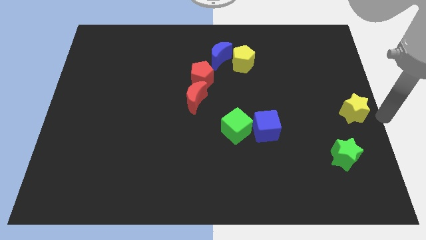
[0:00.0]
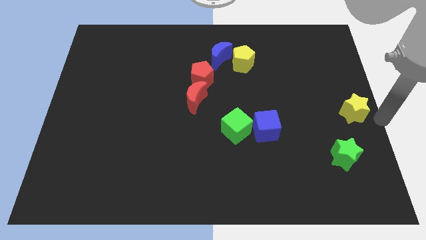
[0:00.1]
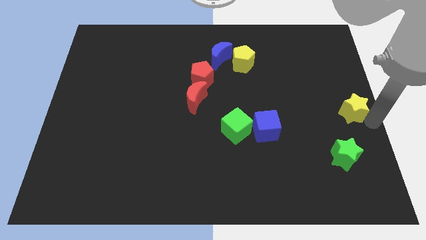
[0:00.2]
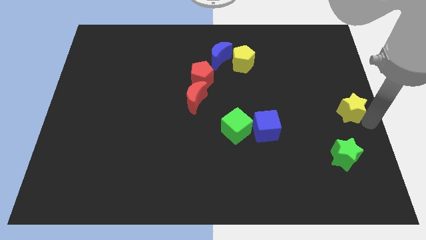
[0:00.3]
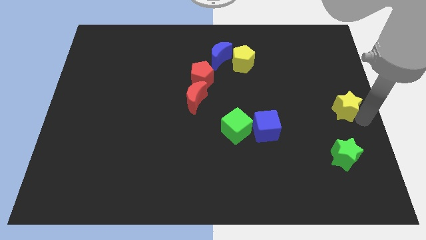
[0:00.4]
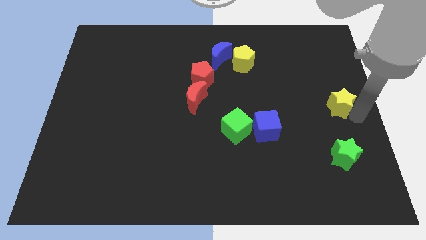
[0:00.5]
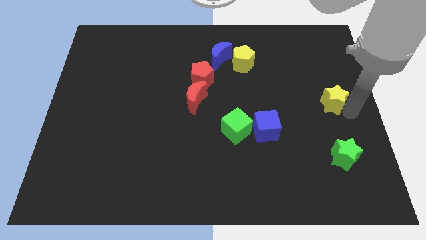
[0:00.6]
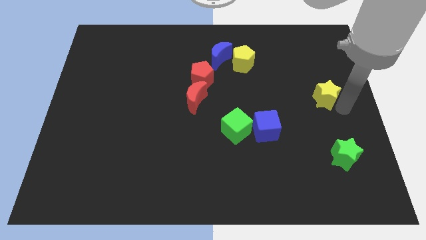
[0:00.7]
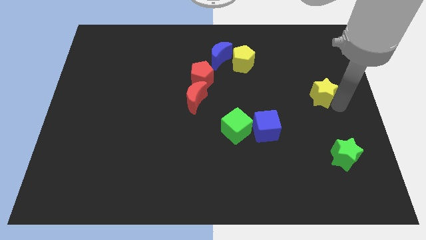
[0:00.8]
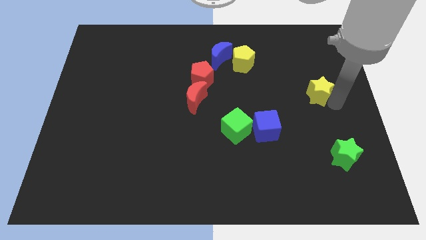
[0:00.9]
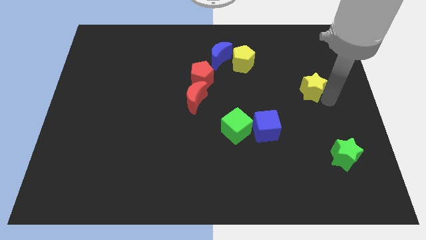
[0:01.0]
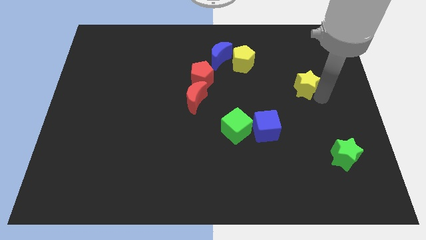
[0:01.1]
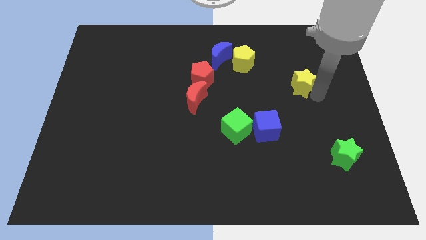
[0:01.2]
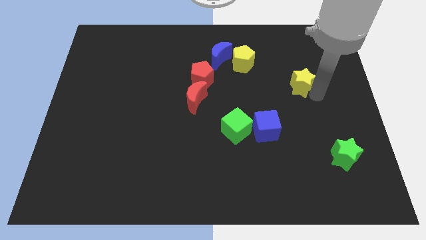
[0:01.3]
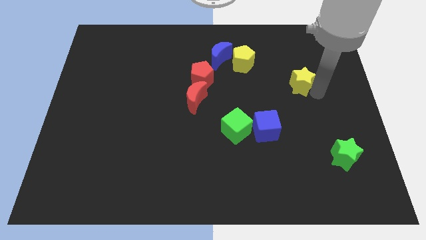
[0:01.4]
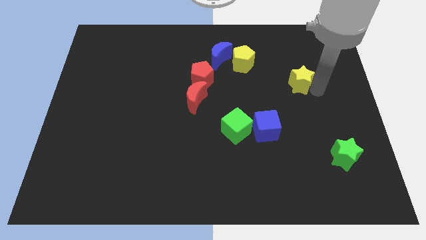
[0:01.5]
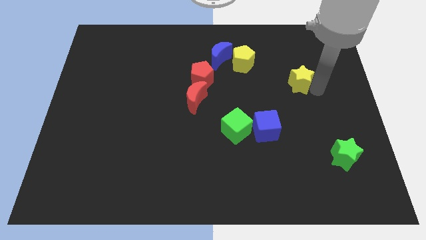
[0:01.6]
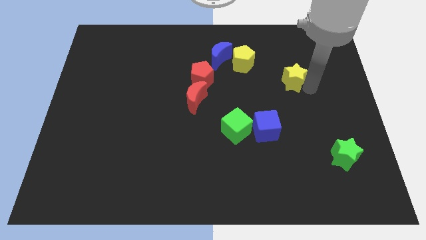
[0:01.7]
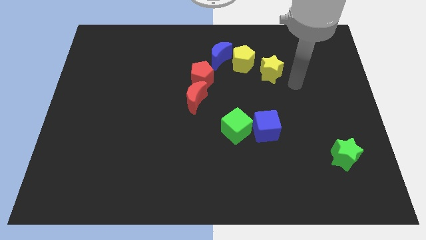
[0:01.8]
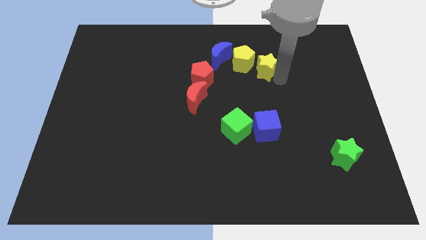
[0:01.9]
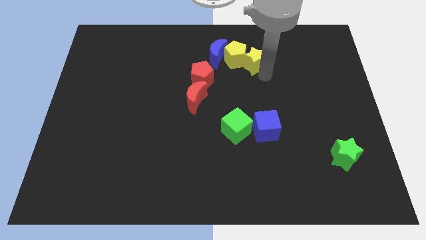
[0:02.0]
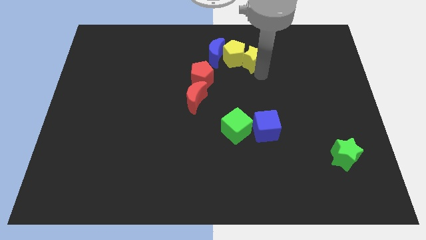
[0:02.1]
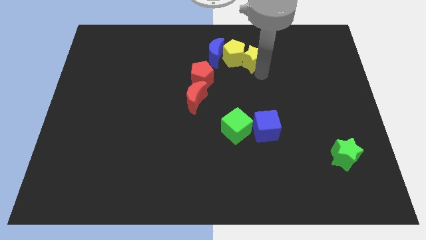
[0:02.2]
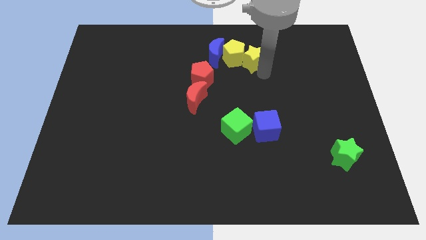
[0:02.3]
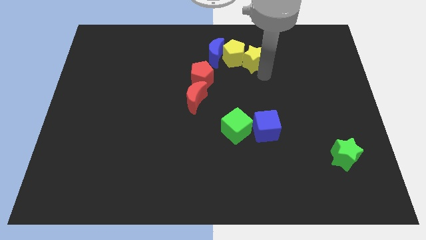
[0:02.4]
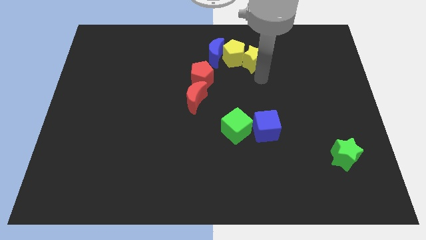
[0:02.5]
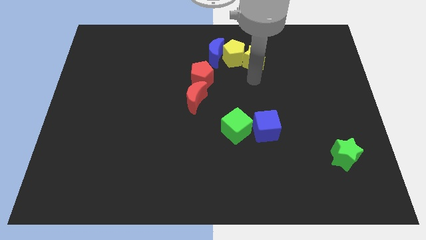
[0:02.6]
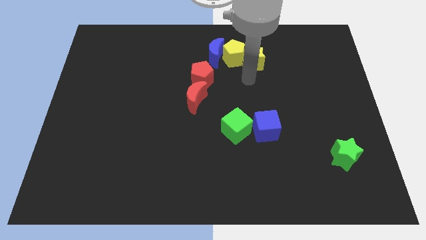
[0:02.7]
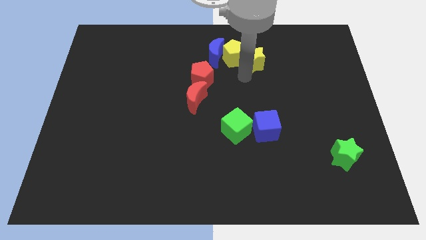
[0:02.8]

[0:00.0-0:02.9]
place the yellow star right to the yellow pentagon

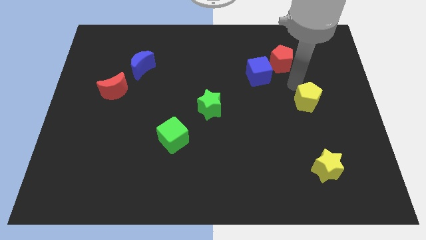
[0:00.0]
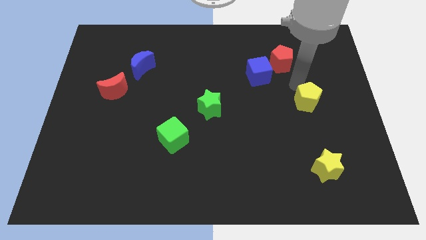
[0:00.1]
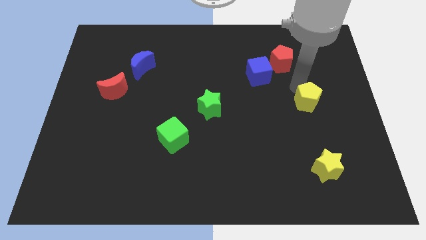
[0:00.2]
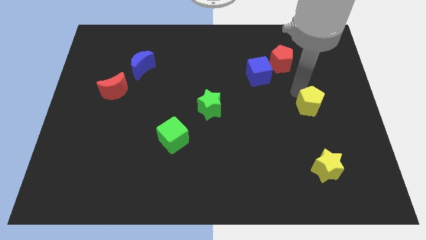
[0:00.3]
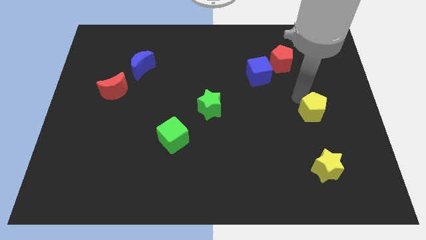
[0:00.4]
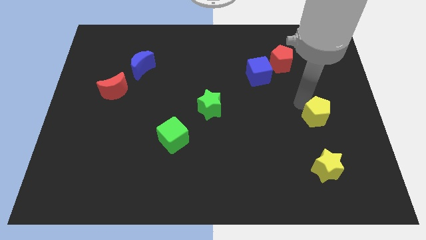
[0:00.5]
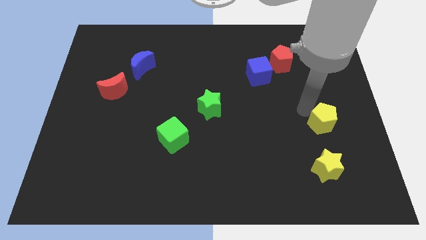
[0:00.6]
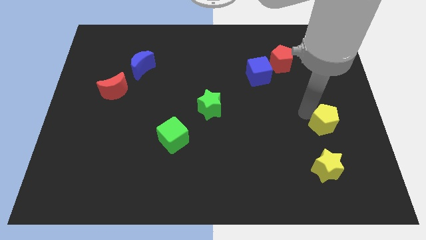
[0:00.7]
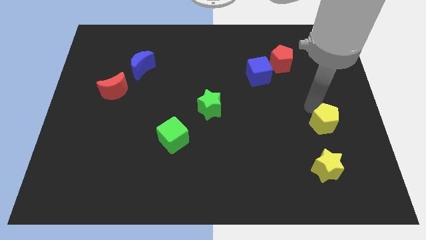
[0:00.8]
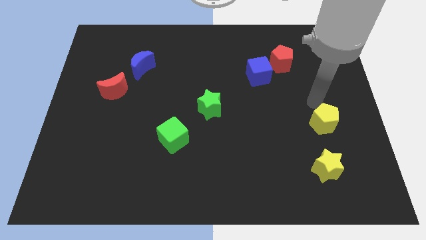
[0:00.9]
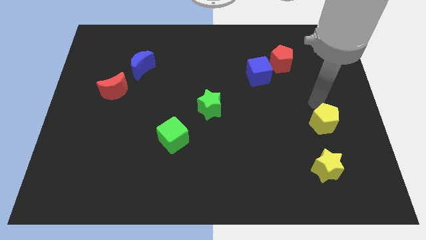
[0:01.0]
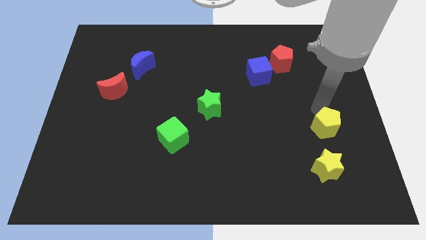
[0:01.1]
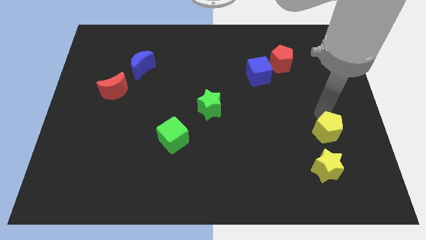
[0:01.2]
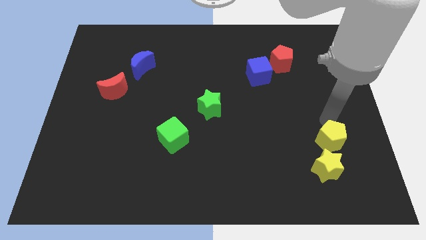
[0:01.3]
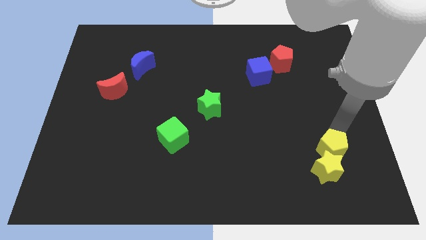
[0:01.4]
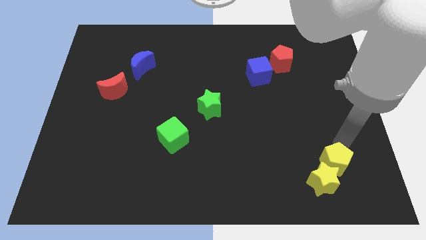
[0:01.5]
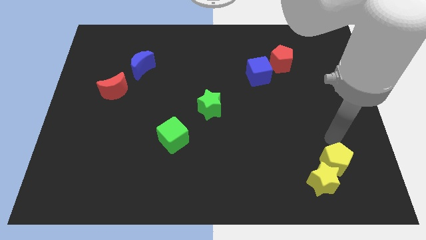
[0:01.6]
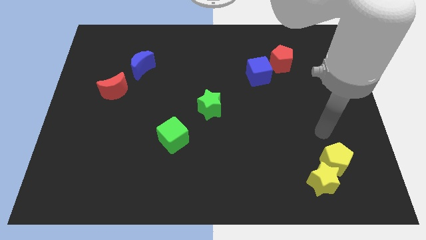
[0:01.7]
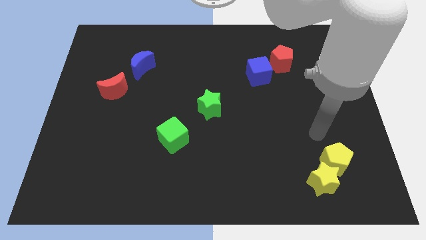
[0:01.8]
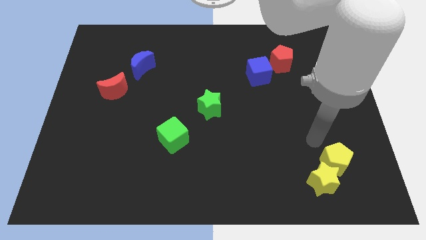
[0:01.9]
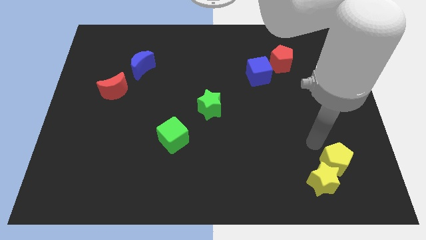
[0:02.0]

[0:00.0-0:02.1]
push the yellow pentagon into the yellow star

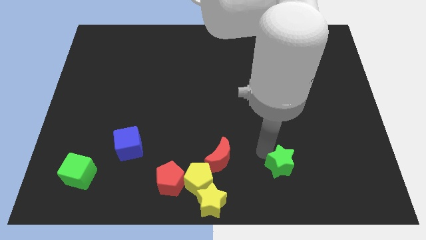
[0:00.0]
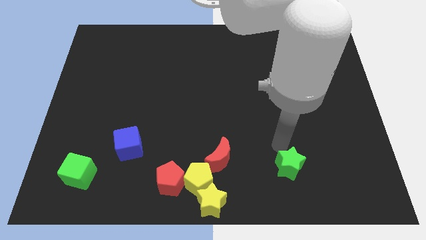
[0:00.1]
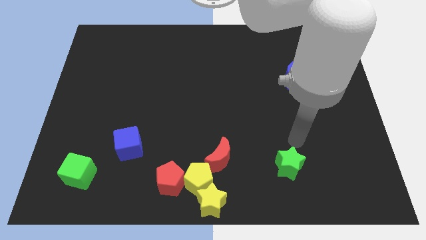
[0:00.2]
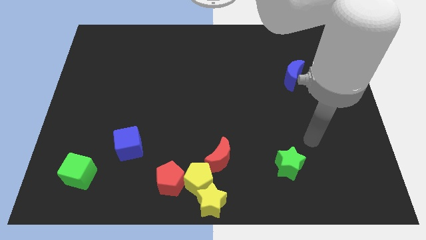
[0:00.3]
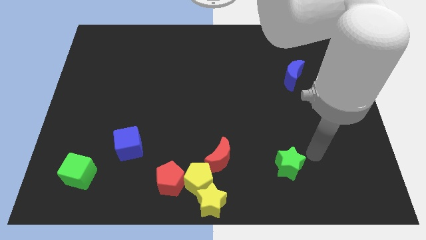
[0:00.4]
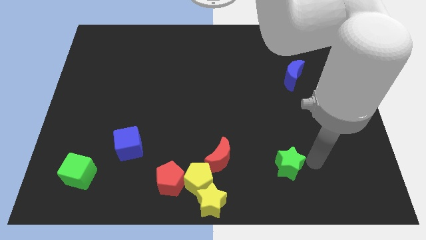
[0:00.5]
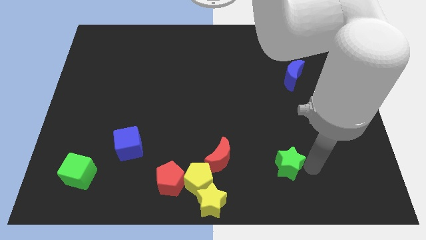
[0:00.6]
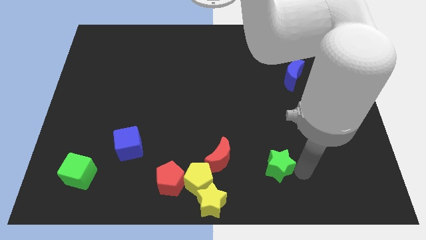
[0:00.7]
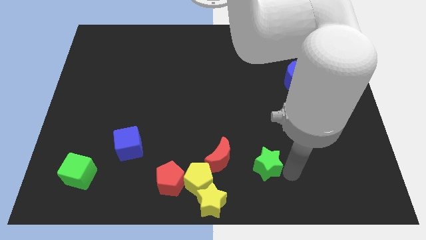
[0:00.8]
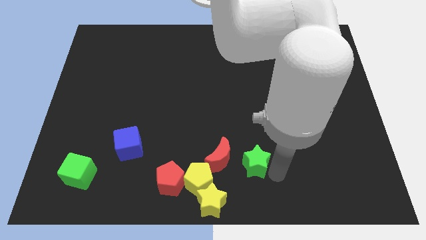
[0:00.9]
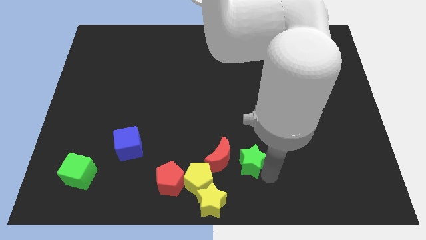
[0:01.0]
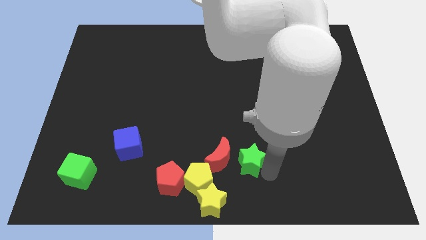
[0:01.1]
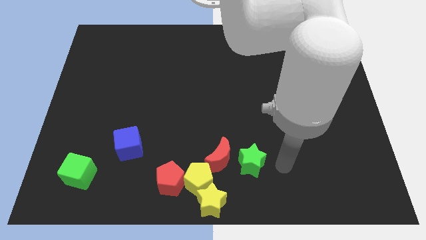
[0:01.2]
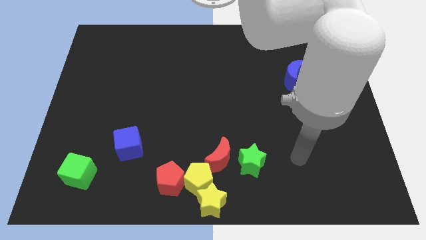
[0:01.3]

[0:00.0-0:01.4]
move the green star towards the left

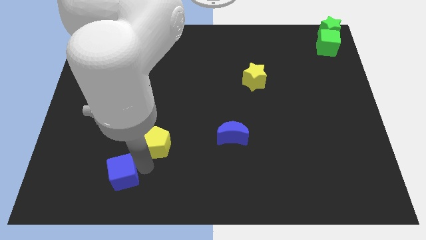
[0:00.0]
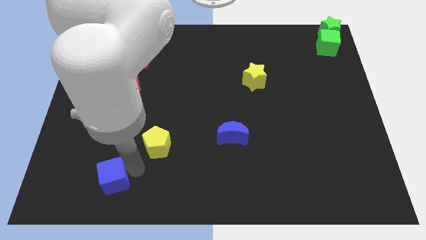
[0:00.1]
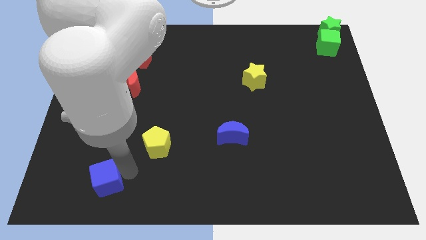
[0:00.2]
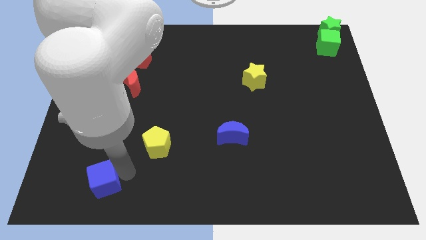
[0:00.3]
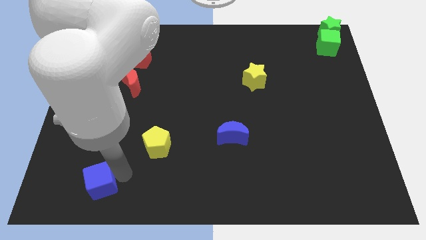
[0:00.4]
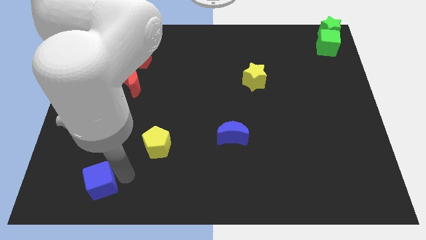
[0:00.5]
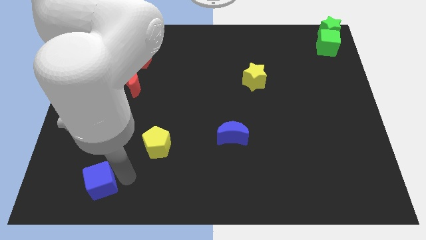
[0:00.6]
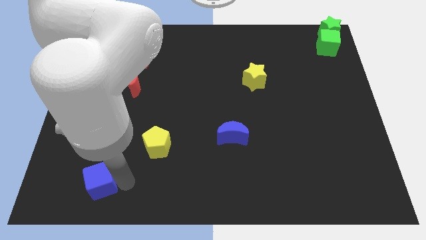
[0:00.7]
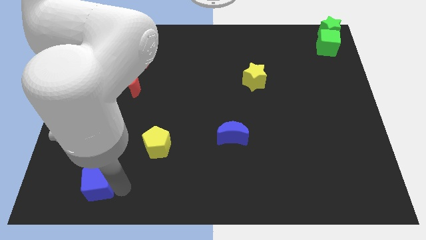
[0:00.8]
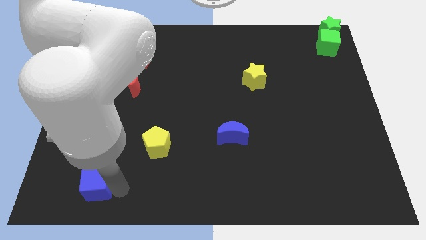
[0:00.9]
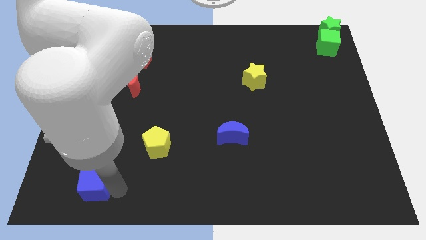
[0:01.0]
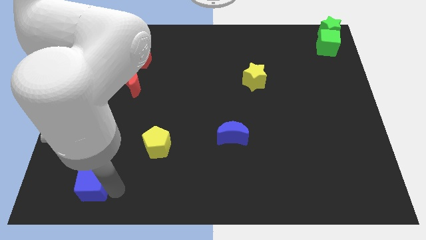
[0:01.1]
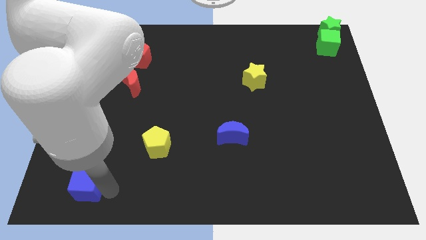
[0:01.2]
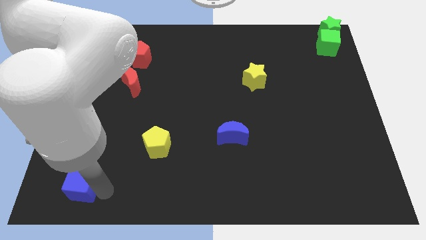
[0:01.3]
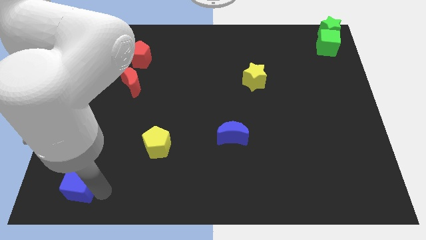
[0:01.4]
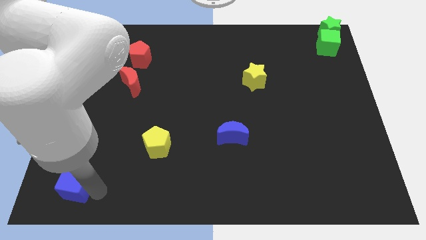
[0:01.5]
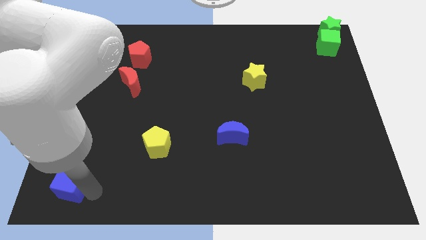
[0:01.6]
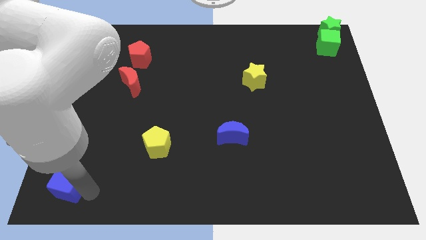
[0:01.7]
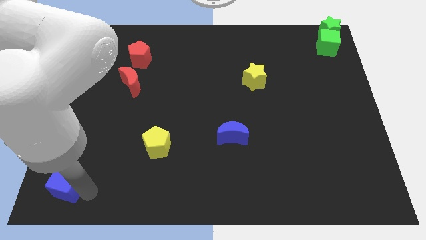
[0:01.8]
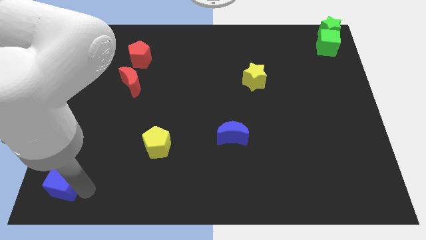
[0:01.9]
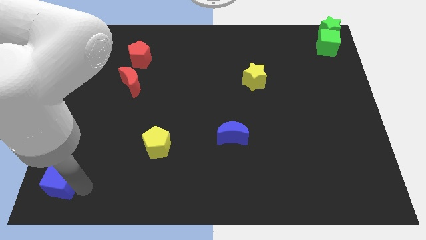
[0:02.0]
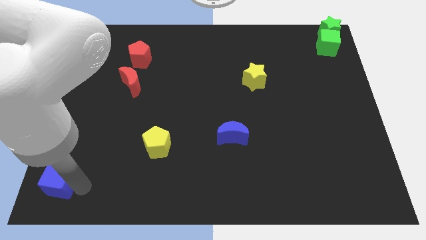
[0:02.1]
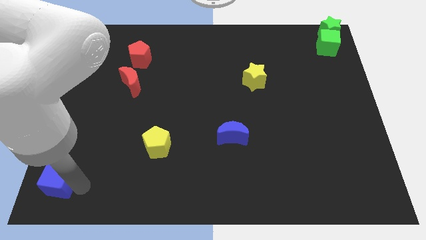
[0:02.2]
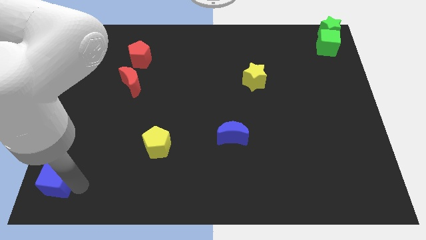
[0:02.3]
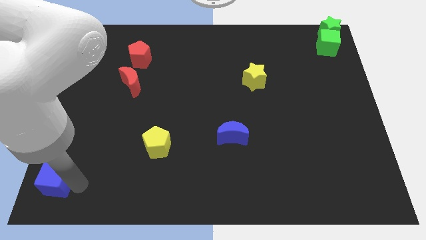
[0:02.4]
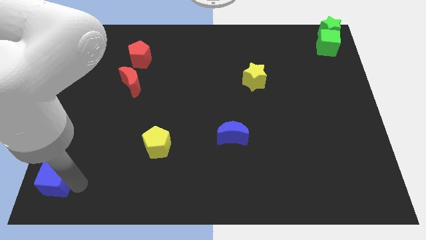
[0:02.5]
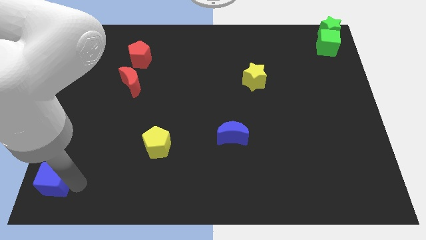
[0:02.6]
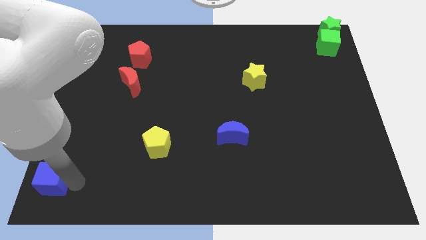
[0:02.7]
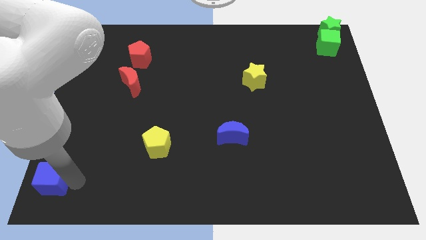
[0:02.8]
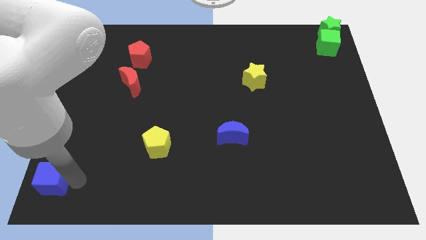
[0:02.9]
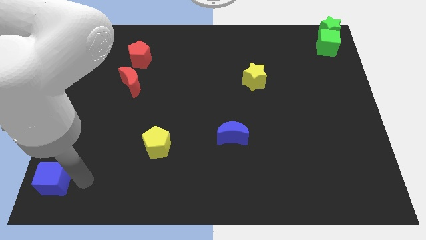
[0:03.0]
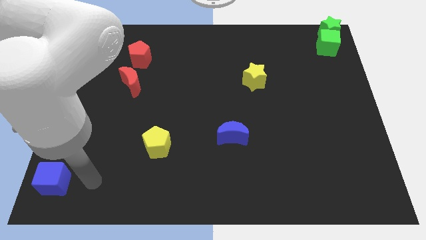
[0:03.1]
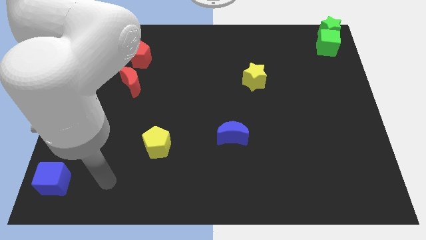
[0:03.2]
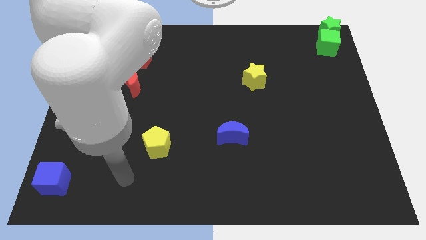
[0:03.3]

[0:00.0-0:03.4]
put the blue cube at the bottom left corner of the board
